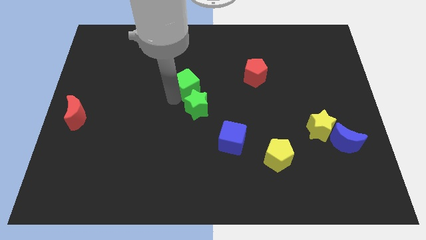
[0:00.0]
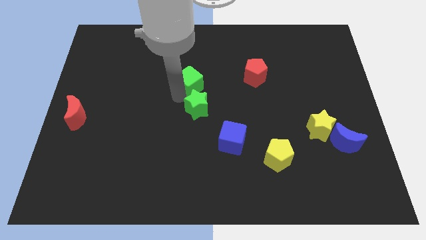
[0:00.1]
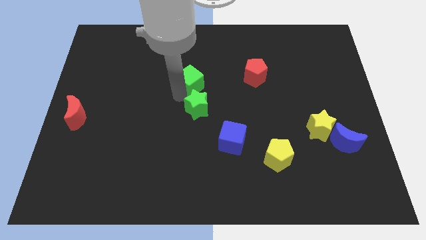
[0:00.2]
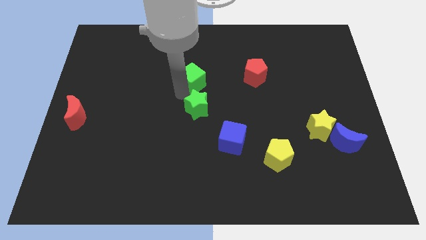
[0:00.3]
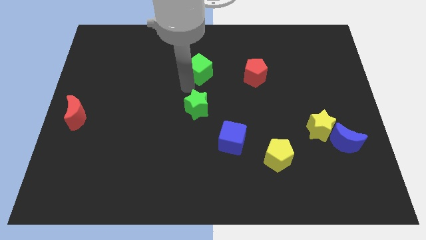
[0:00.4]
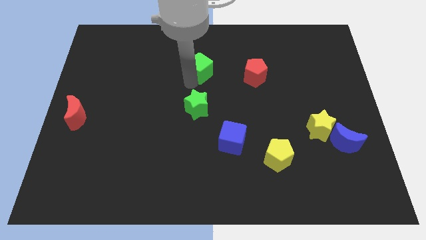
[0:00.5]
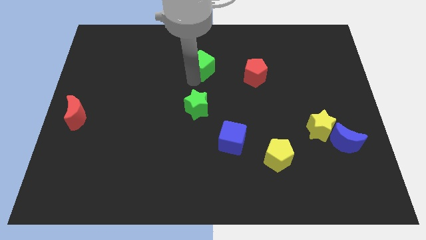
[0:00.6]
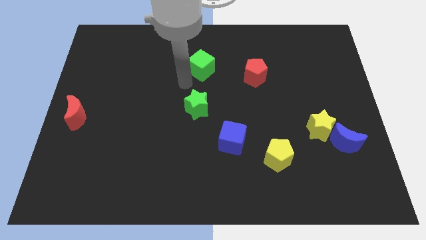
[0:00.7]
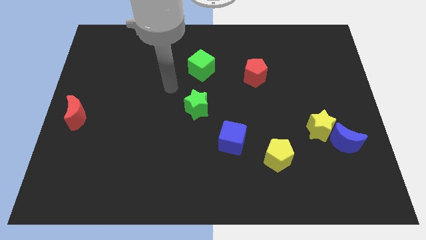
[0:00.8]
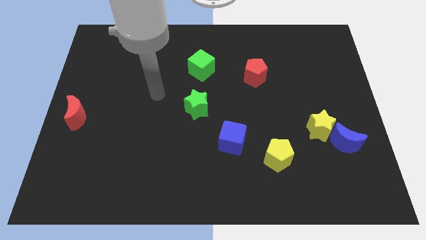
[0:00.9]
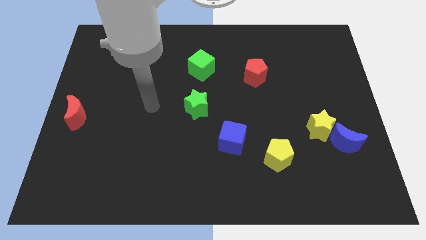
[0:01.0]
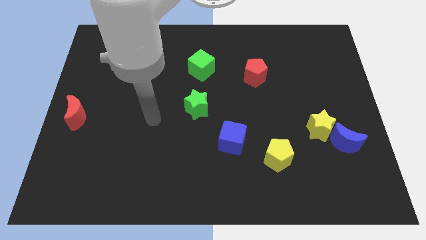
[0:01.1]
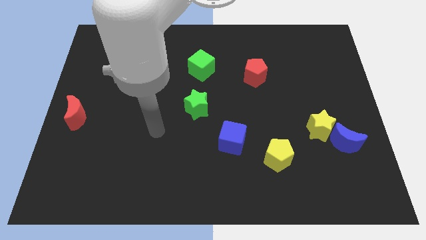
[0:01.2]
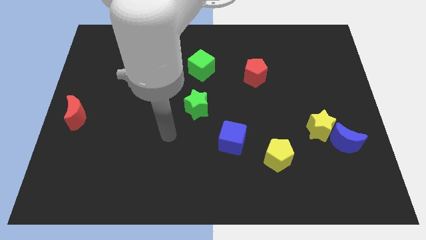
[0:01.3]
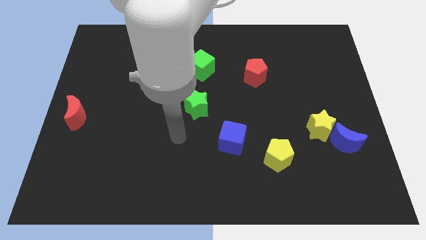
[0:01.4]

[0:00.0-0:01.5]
separate the green cube from the green star

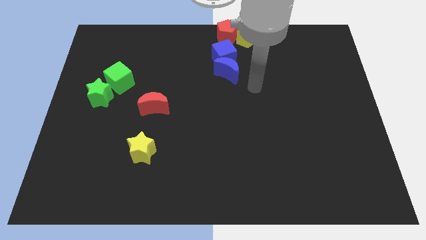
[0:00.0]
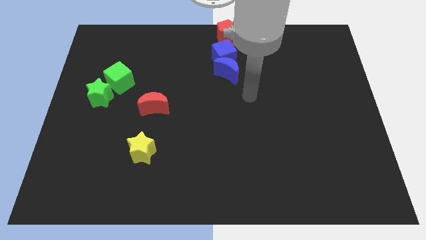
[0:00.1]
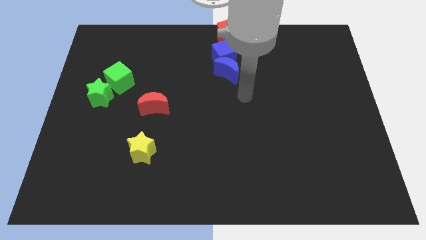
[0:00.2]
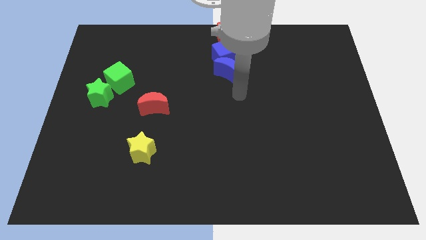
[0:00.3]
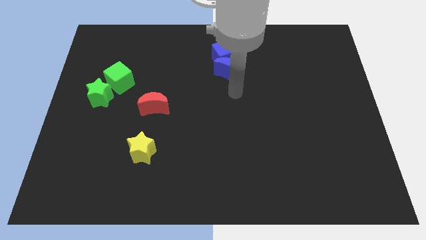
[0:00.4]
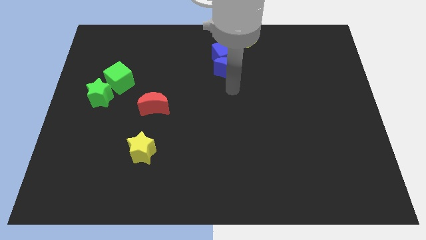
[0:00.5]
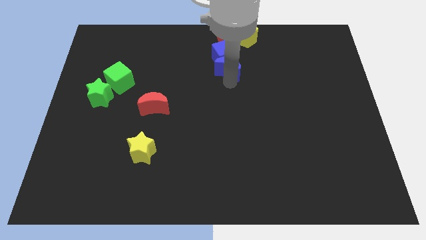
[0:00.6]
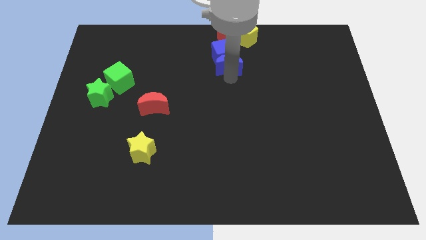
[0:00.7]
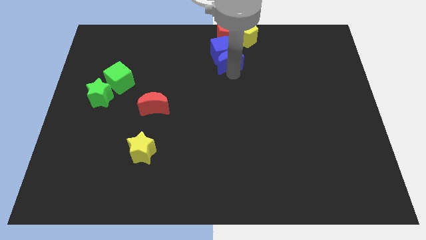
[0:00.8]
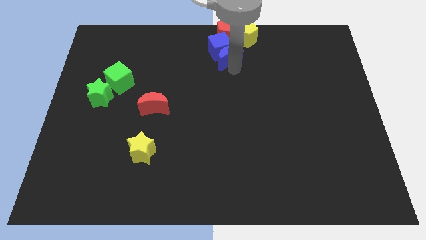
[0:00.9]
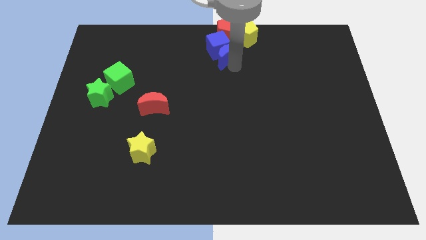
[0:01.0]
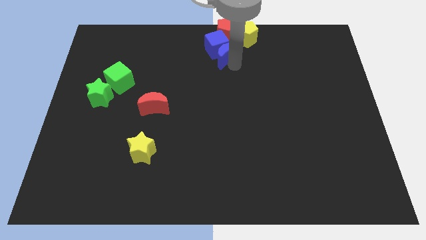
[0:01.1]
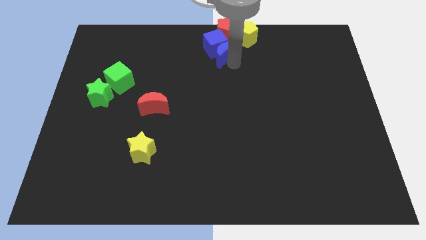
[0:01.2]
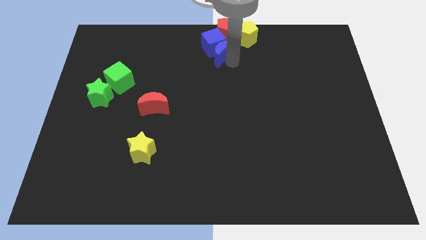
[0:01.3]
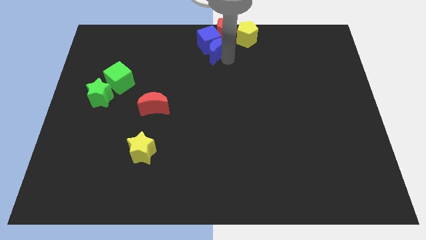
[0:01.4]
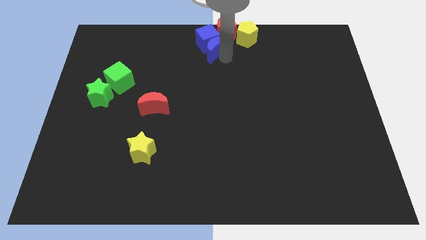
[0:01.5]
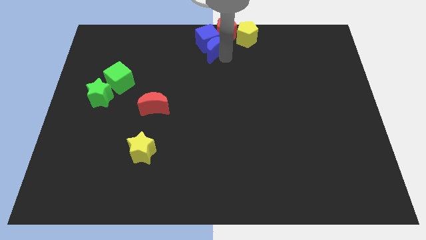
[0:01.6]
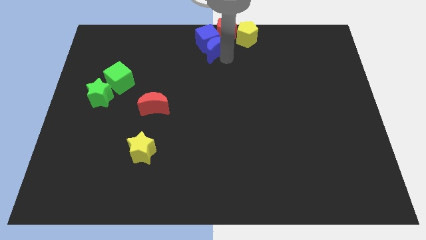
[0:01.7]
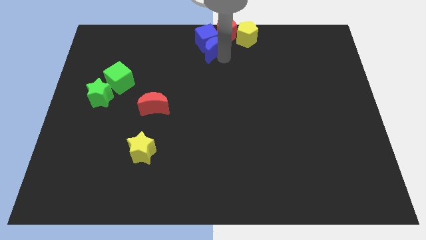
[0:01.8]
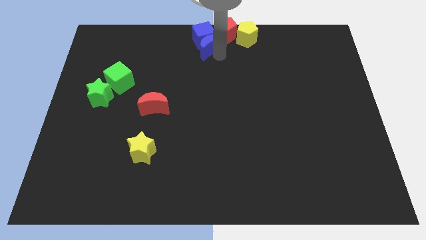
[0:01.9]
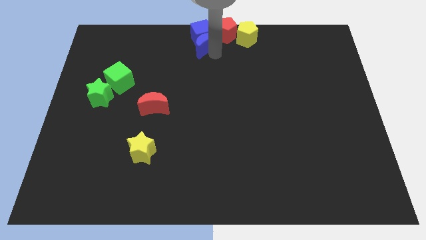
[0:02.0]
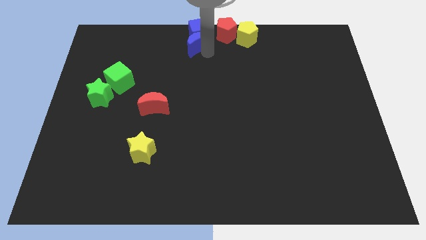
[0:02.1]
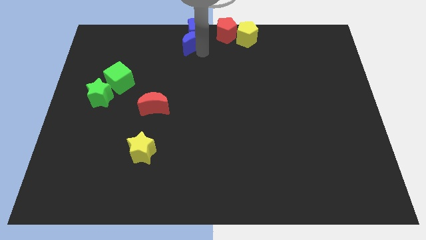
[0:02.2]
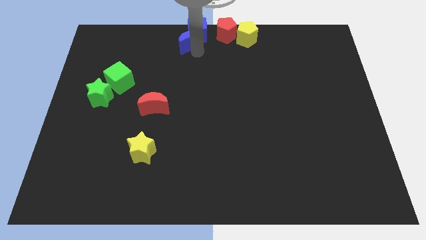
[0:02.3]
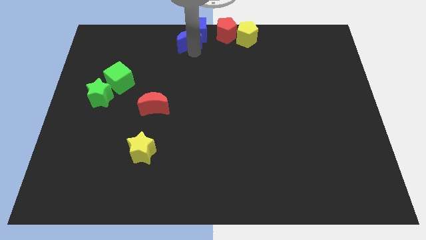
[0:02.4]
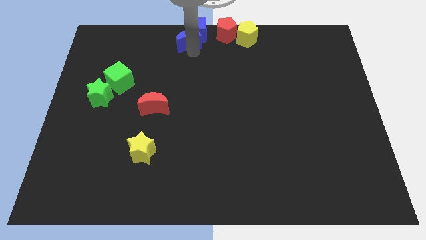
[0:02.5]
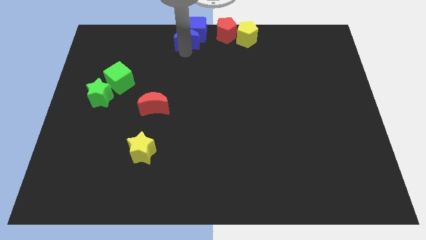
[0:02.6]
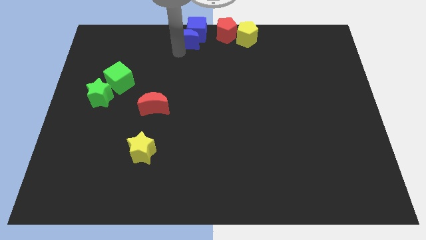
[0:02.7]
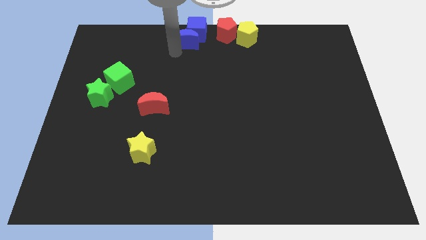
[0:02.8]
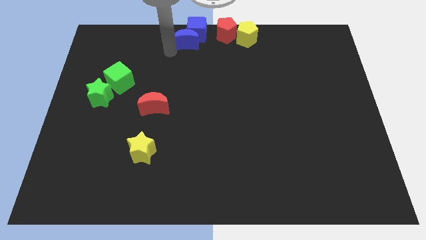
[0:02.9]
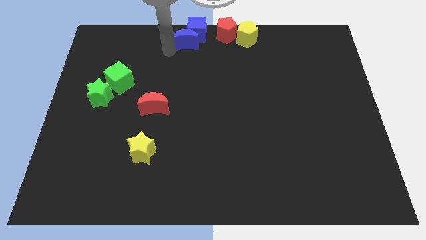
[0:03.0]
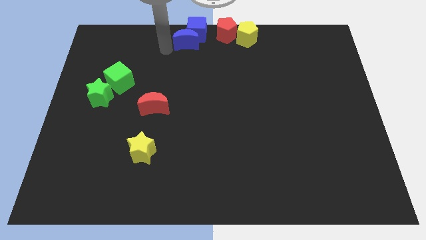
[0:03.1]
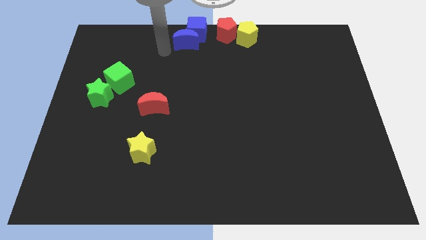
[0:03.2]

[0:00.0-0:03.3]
put the group of blue blocks at the left side of the red pentagon

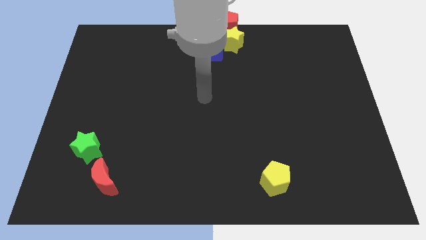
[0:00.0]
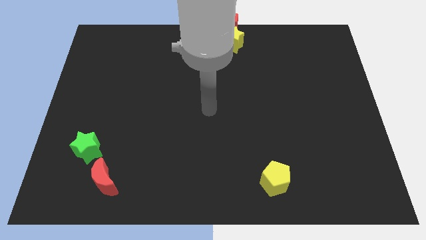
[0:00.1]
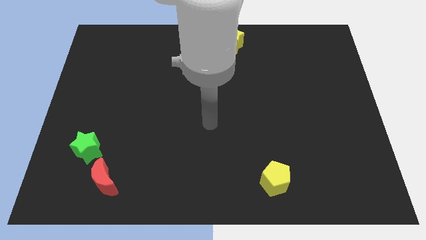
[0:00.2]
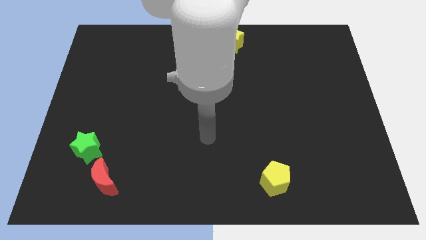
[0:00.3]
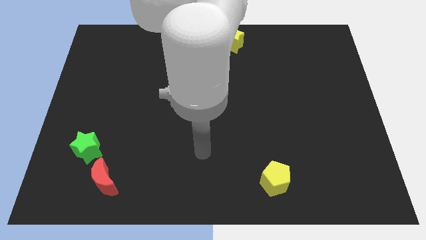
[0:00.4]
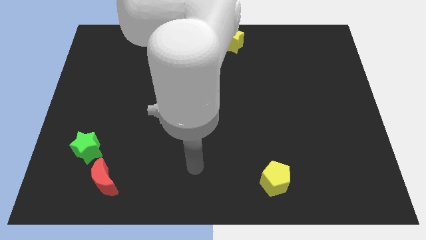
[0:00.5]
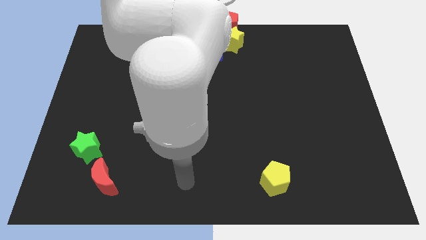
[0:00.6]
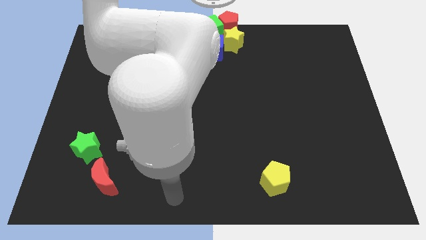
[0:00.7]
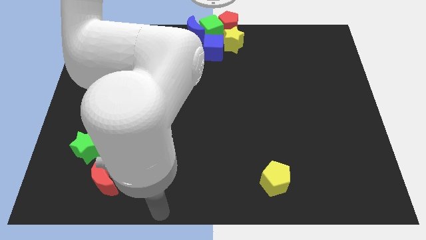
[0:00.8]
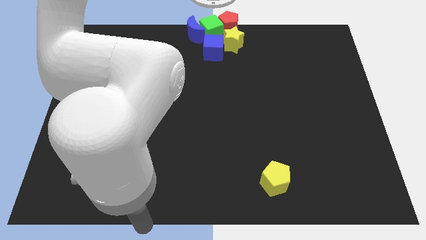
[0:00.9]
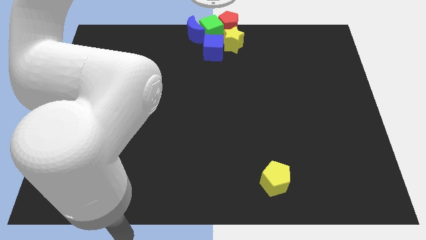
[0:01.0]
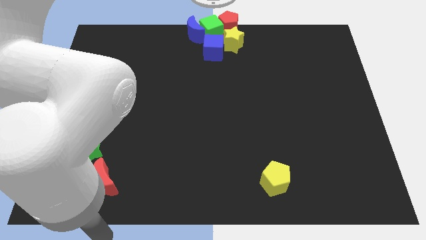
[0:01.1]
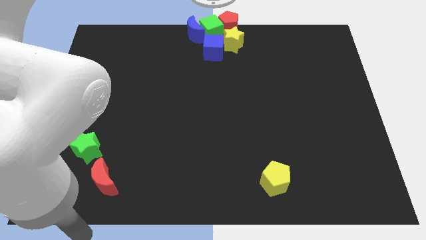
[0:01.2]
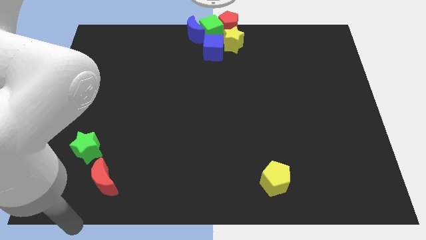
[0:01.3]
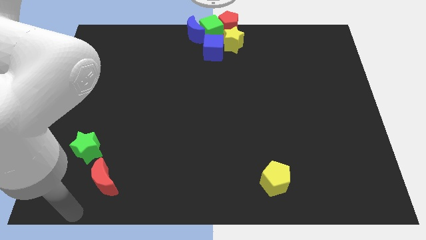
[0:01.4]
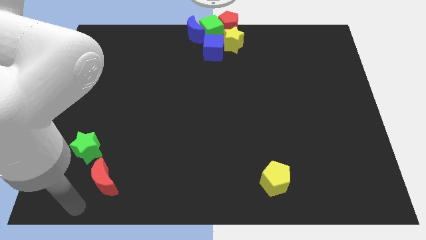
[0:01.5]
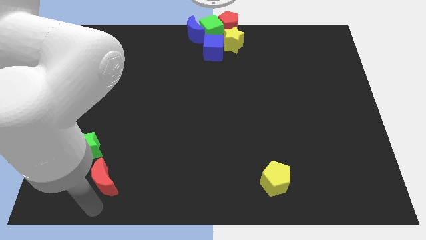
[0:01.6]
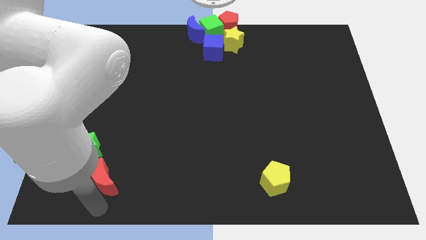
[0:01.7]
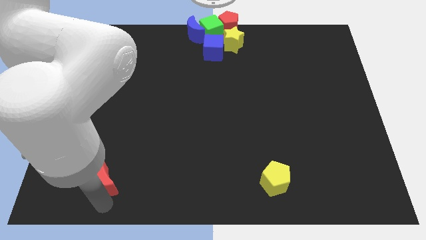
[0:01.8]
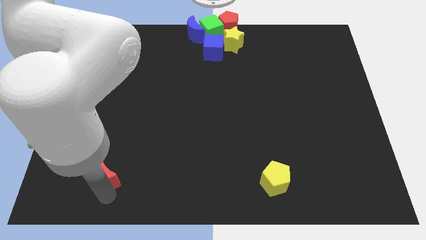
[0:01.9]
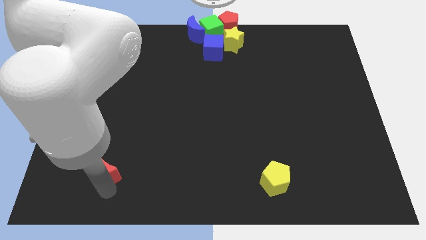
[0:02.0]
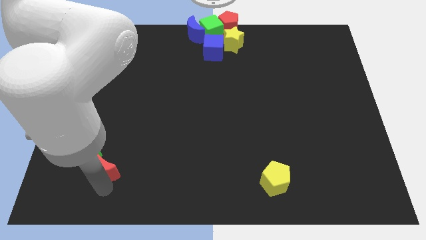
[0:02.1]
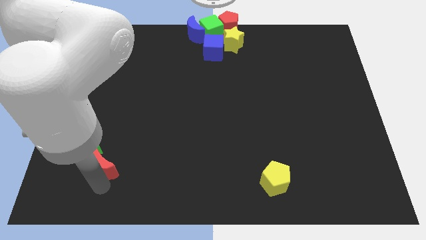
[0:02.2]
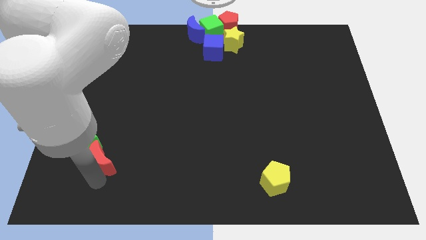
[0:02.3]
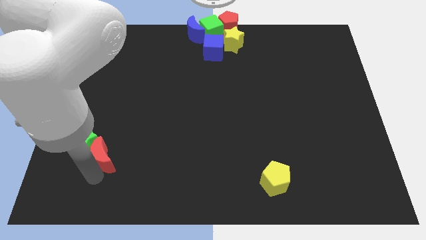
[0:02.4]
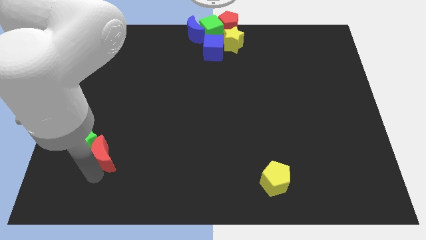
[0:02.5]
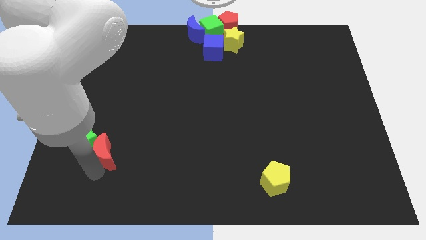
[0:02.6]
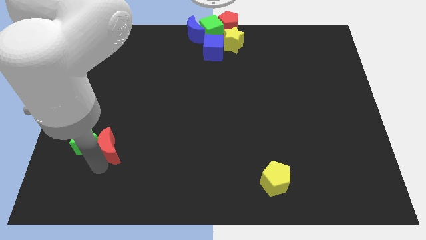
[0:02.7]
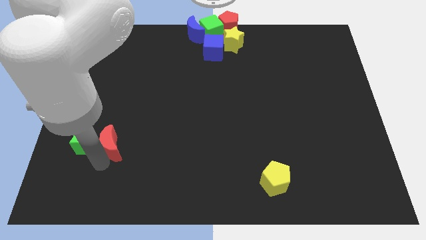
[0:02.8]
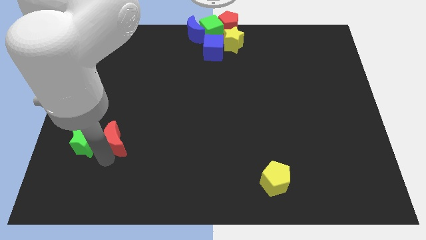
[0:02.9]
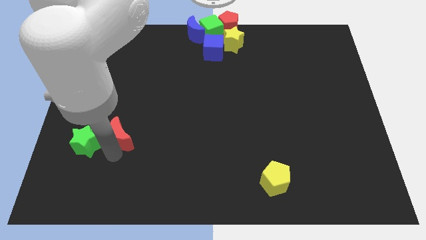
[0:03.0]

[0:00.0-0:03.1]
place the red moon right to the green star

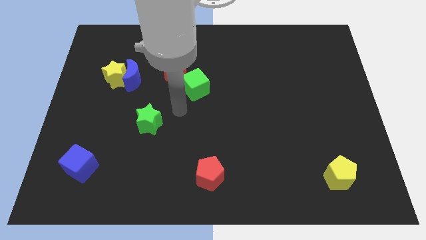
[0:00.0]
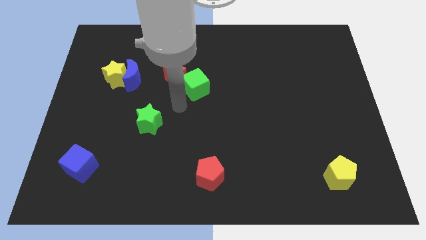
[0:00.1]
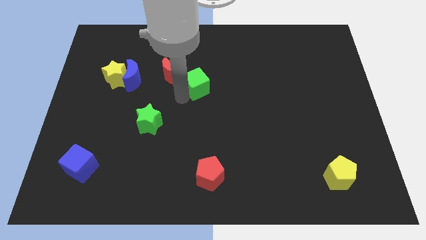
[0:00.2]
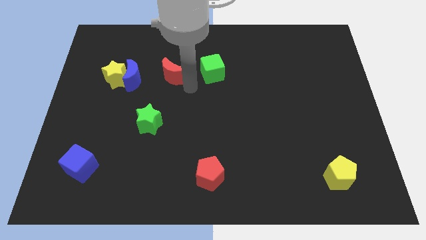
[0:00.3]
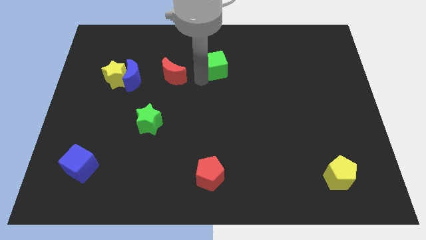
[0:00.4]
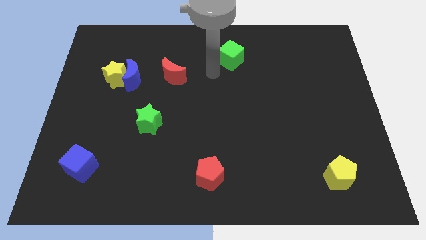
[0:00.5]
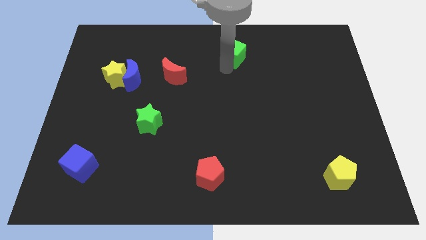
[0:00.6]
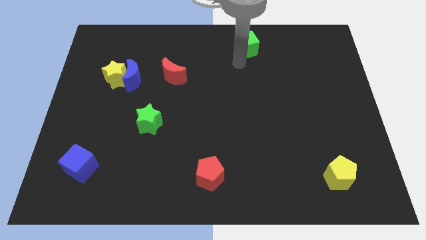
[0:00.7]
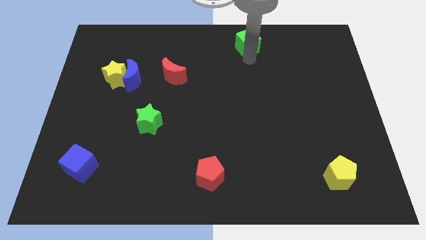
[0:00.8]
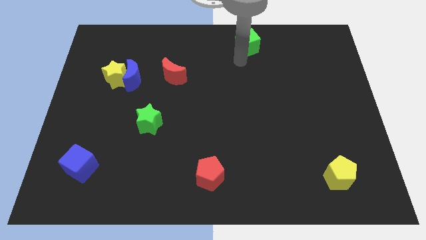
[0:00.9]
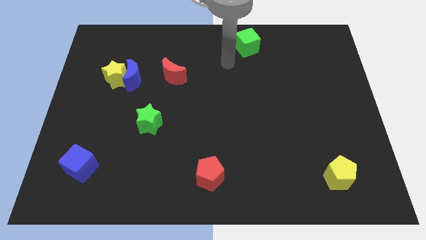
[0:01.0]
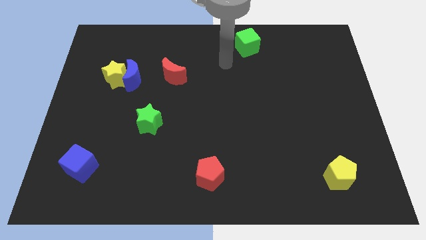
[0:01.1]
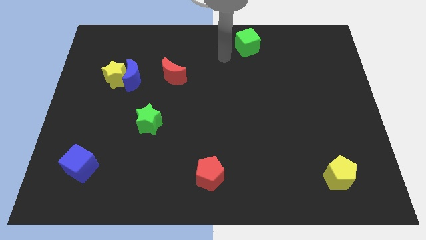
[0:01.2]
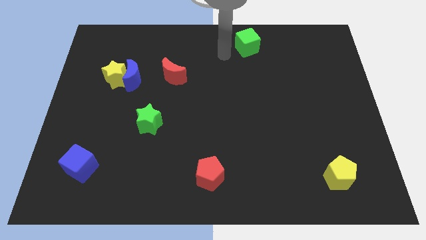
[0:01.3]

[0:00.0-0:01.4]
push the green cube towards the top right of the board
